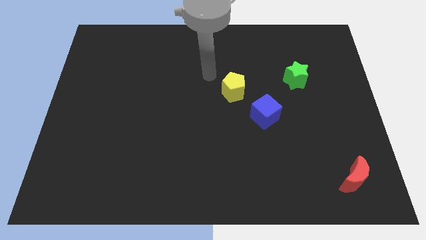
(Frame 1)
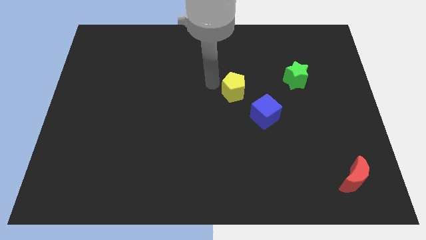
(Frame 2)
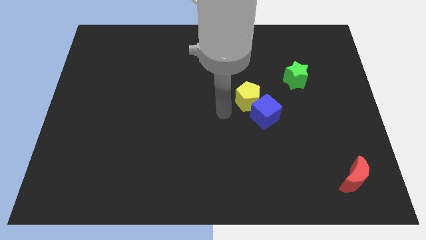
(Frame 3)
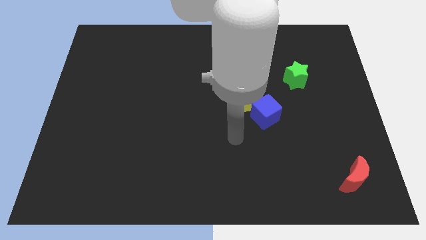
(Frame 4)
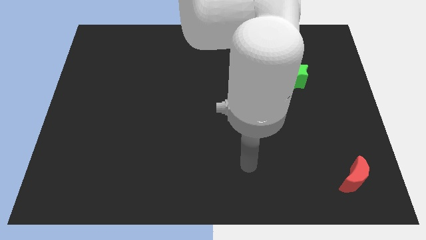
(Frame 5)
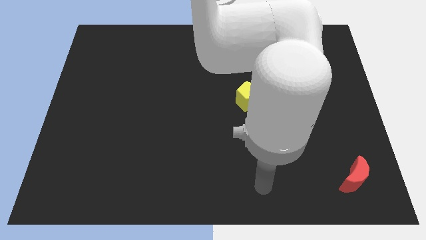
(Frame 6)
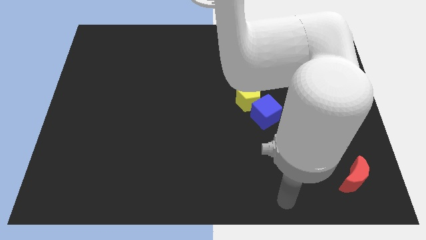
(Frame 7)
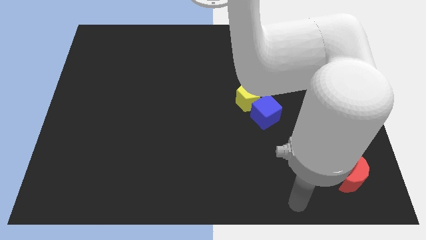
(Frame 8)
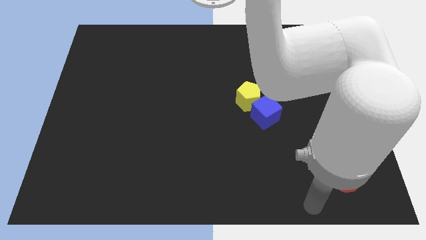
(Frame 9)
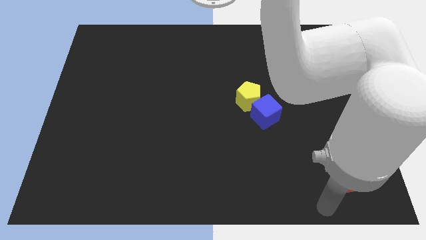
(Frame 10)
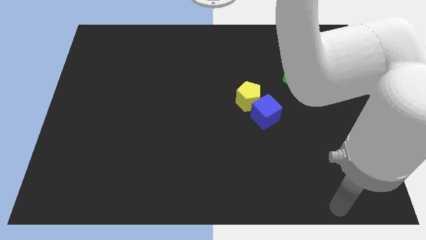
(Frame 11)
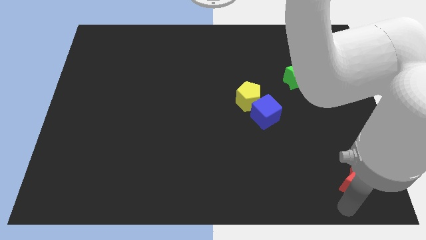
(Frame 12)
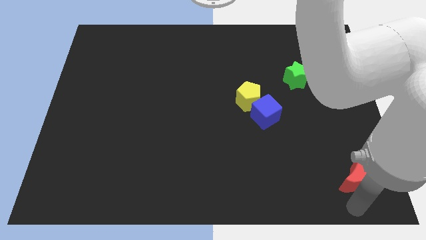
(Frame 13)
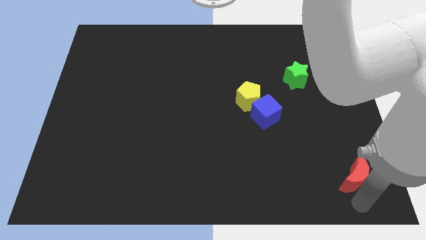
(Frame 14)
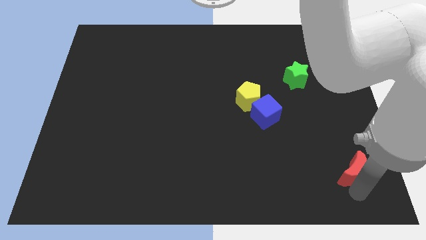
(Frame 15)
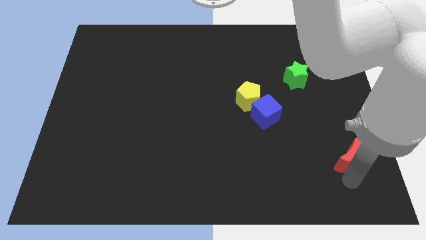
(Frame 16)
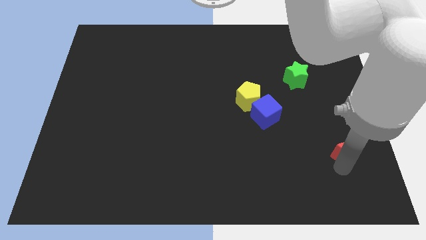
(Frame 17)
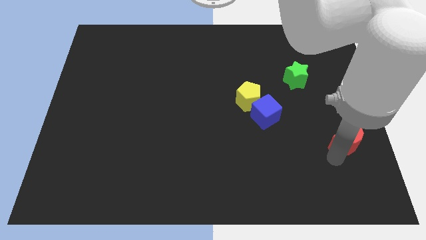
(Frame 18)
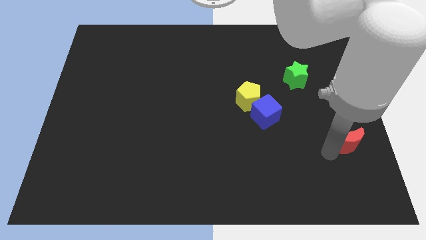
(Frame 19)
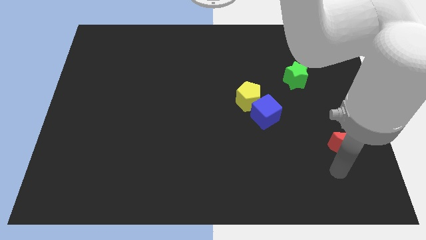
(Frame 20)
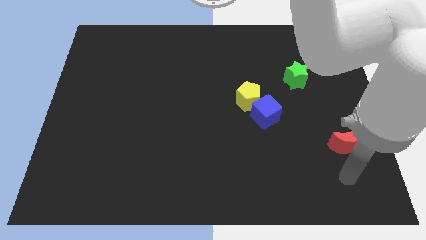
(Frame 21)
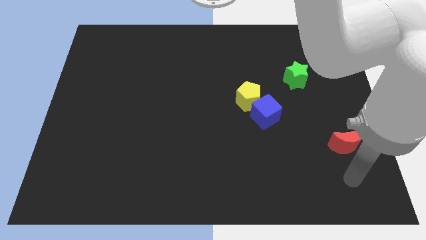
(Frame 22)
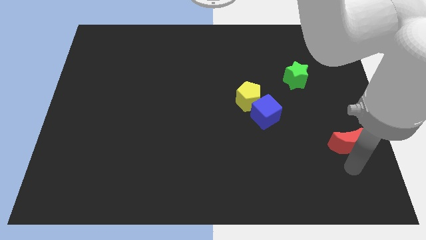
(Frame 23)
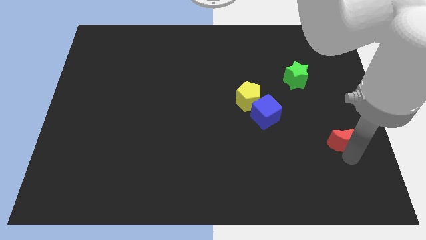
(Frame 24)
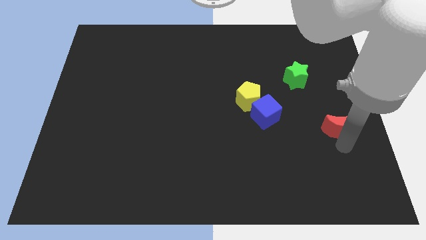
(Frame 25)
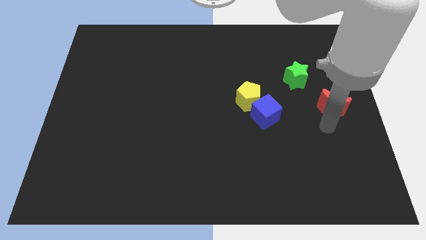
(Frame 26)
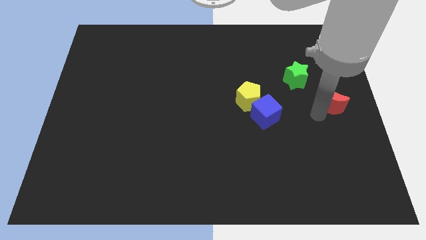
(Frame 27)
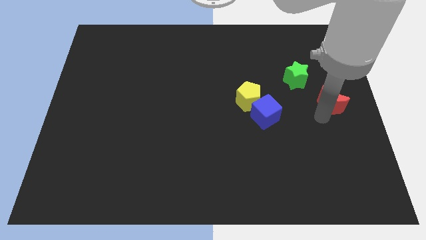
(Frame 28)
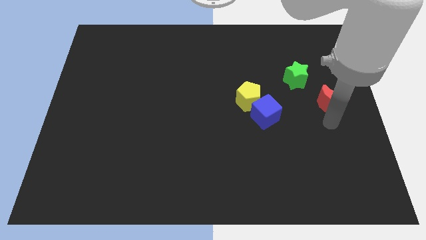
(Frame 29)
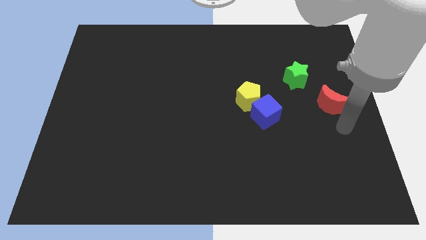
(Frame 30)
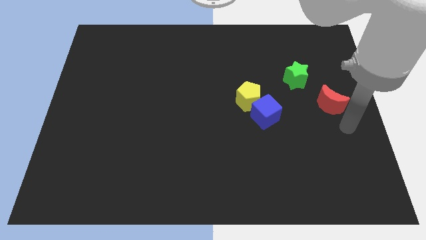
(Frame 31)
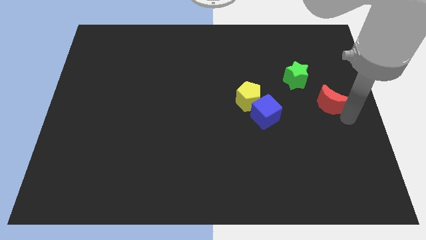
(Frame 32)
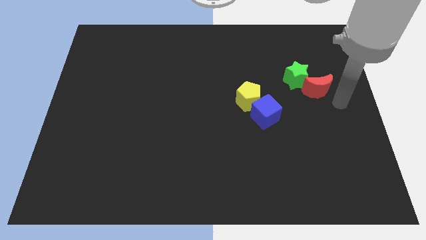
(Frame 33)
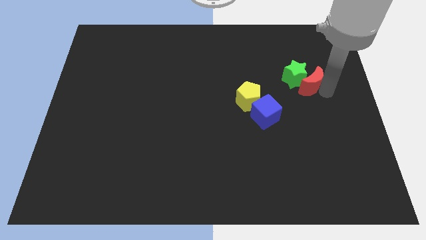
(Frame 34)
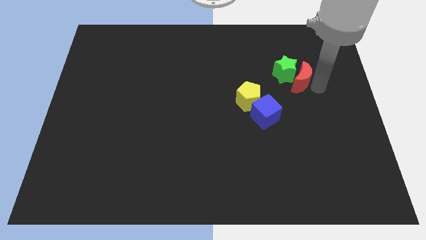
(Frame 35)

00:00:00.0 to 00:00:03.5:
slide the red moon next to the green star

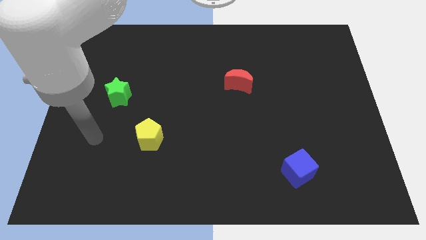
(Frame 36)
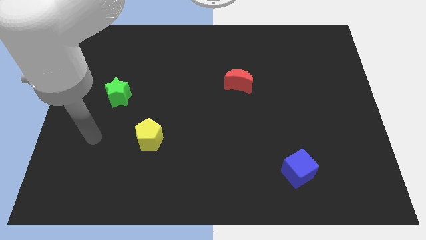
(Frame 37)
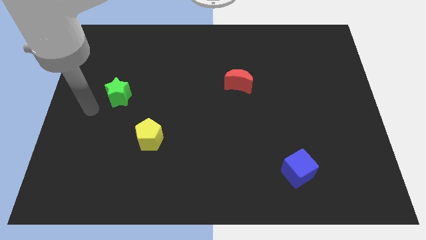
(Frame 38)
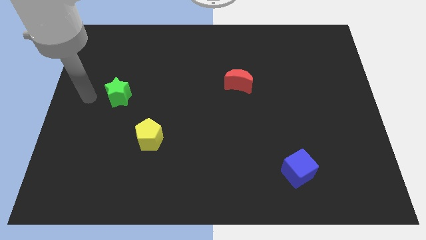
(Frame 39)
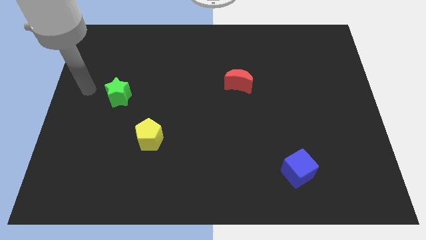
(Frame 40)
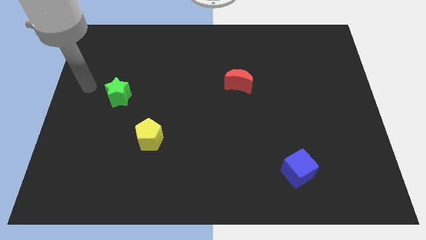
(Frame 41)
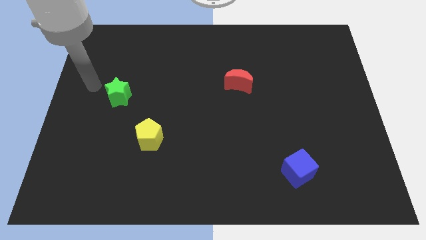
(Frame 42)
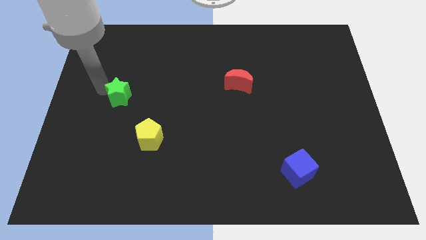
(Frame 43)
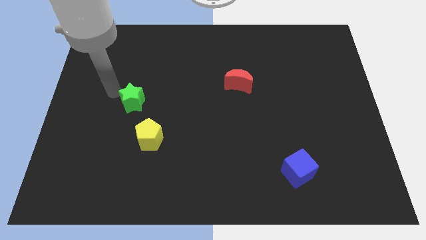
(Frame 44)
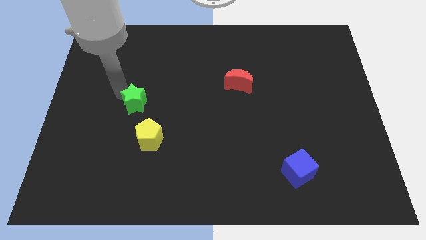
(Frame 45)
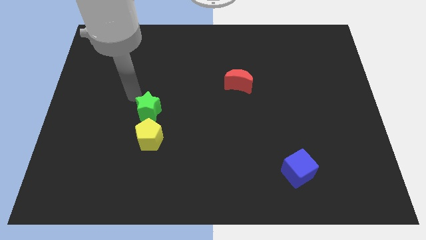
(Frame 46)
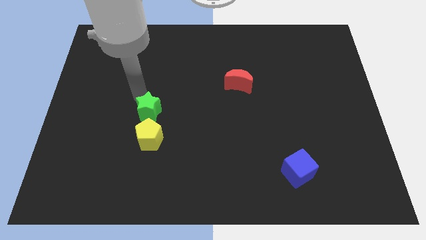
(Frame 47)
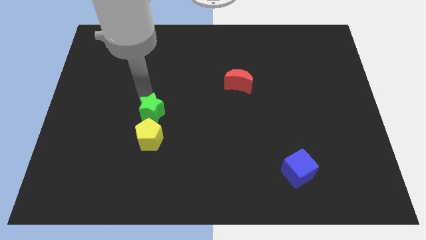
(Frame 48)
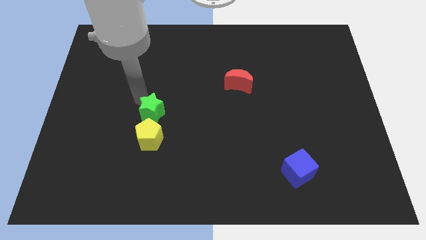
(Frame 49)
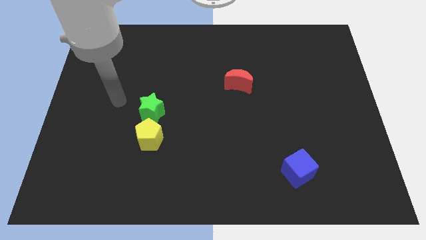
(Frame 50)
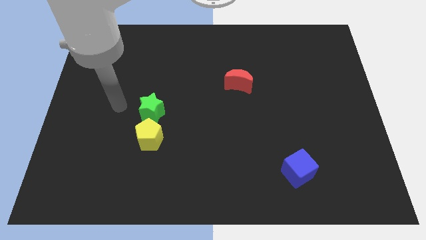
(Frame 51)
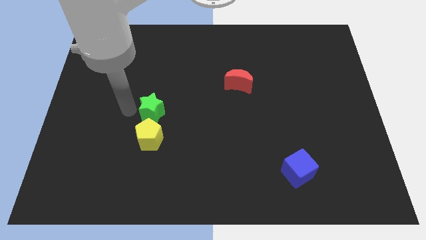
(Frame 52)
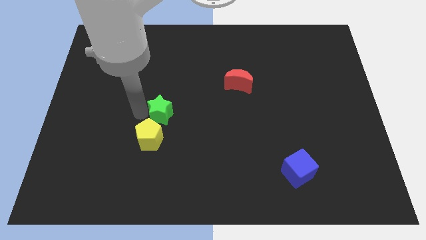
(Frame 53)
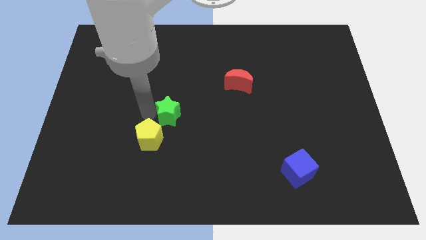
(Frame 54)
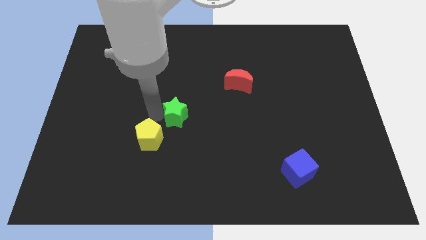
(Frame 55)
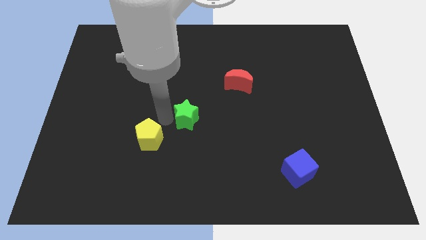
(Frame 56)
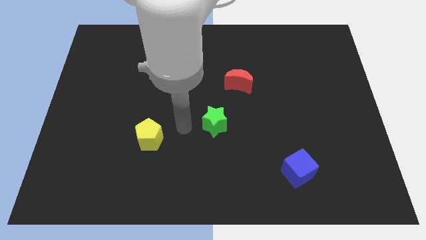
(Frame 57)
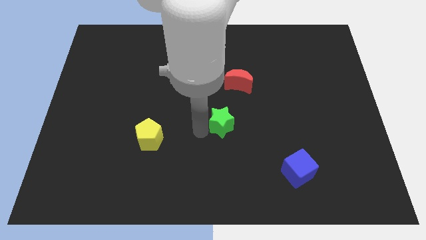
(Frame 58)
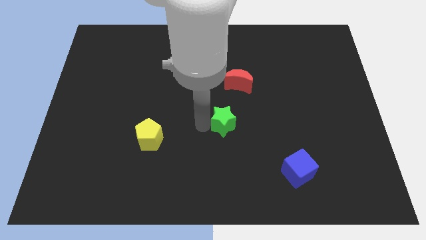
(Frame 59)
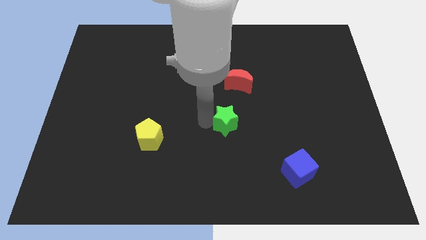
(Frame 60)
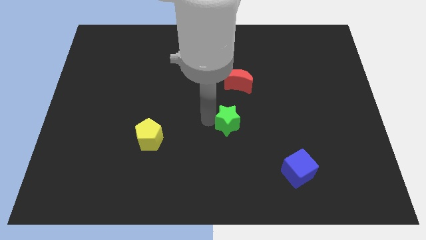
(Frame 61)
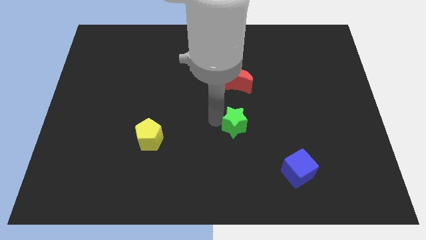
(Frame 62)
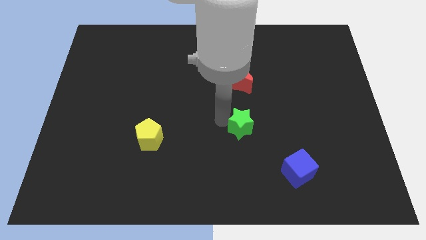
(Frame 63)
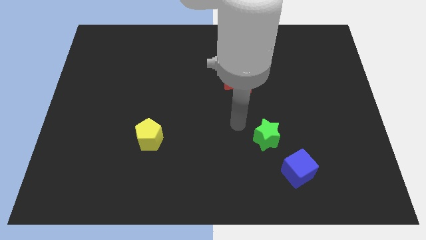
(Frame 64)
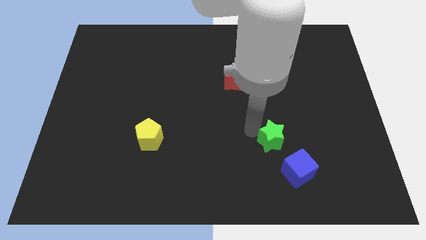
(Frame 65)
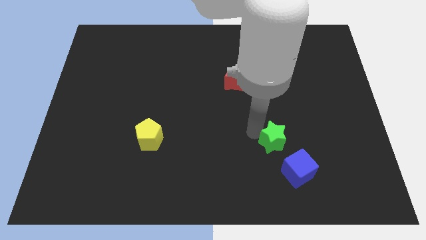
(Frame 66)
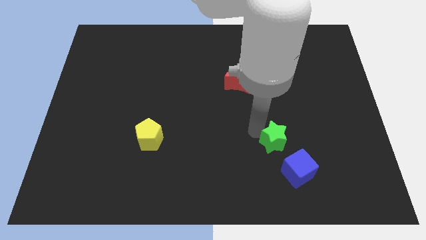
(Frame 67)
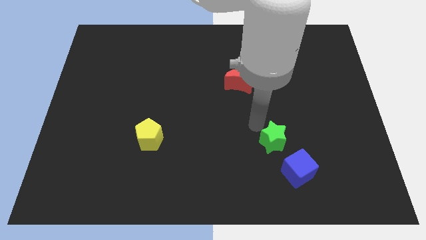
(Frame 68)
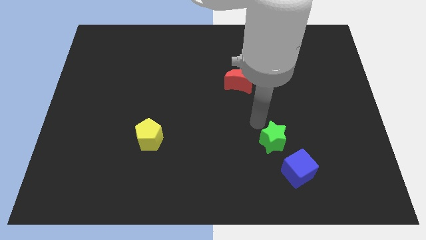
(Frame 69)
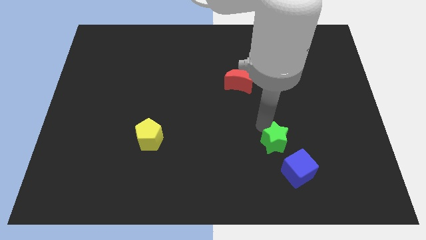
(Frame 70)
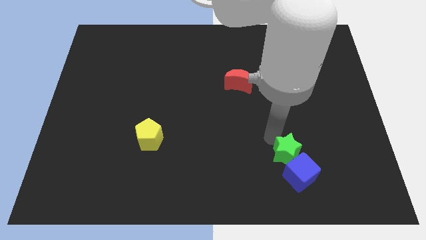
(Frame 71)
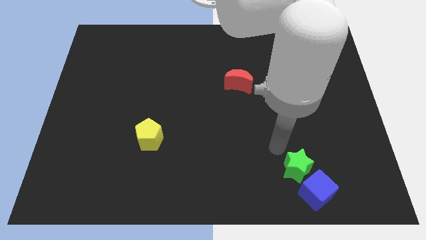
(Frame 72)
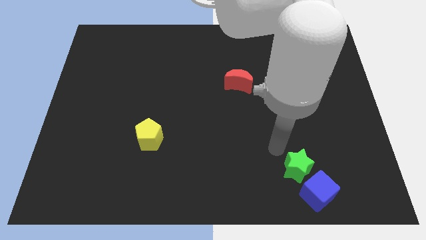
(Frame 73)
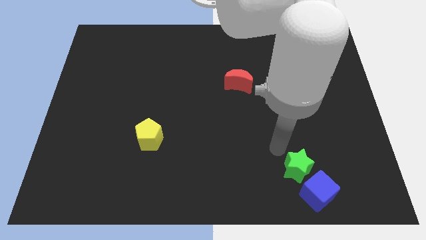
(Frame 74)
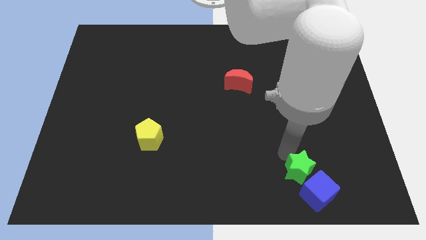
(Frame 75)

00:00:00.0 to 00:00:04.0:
put the star towards the blue block

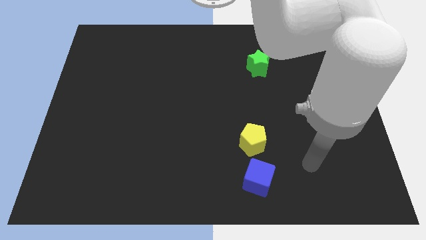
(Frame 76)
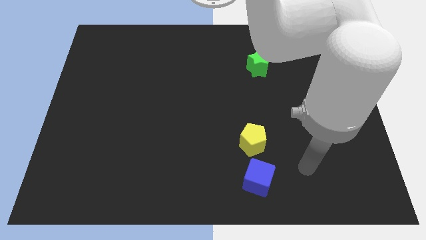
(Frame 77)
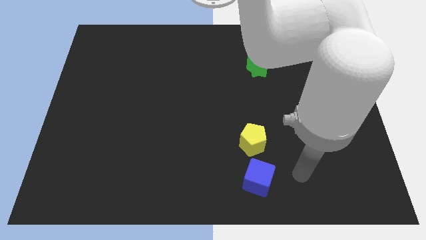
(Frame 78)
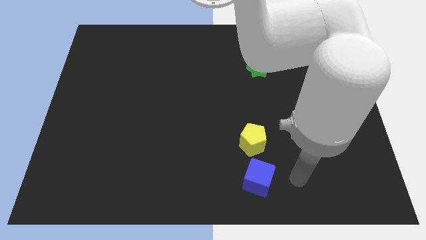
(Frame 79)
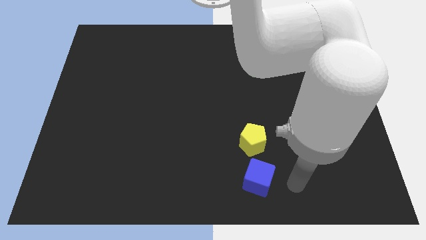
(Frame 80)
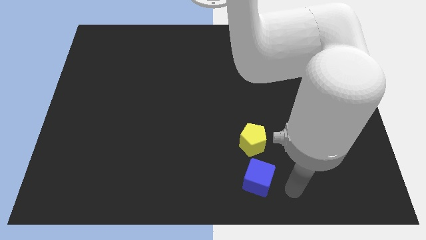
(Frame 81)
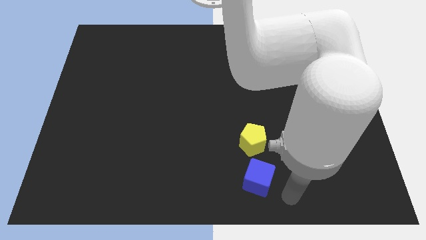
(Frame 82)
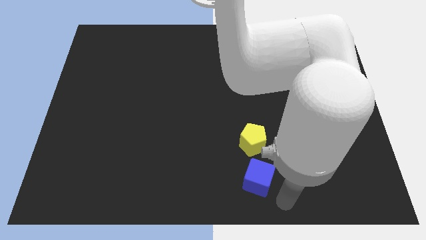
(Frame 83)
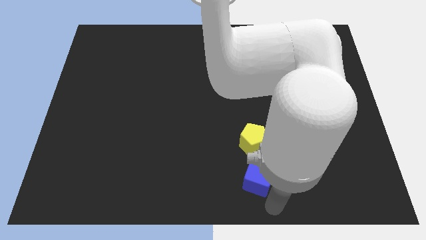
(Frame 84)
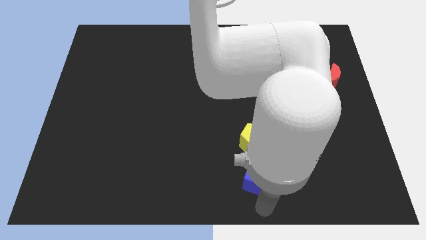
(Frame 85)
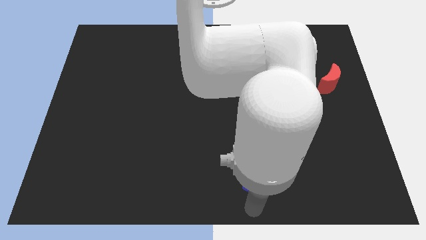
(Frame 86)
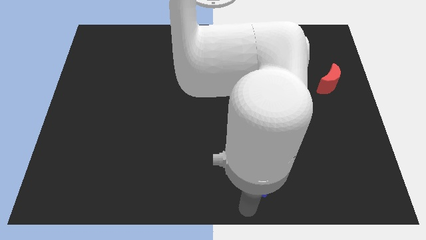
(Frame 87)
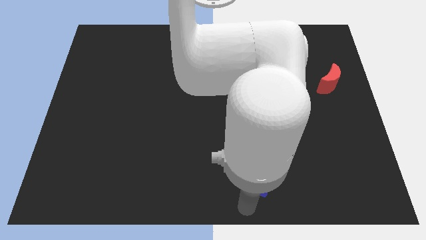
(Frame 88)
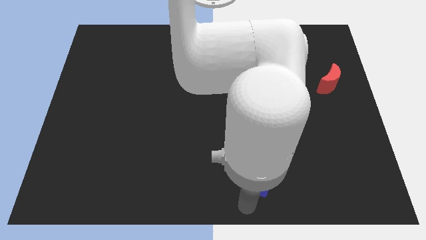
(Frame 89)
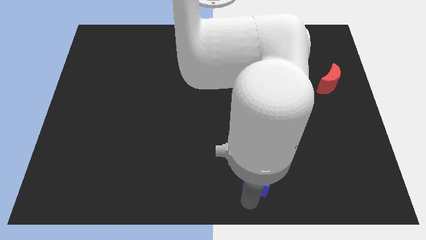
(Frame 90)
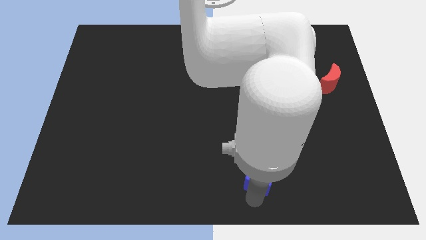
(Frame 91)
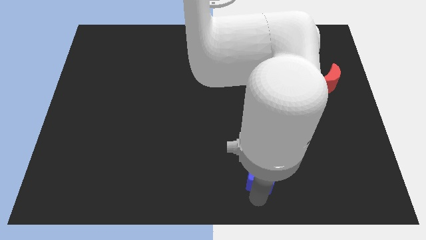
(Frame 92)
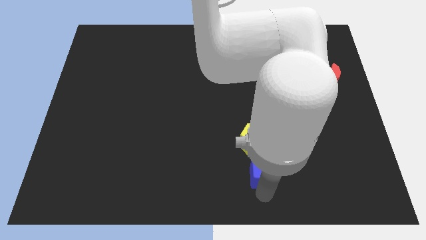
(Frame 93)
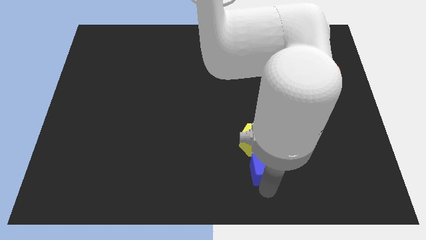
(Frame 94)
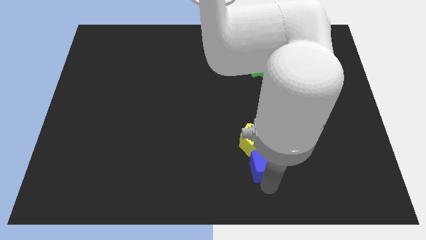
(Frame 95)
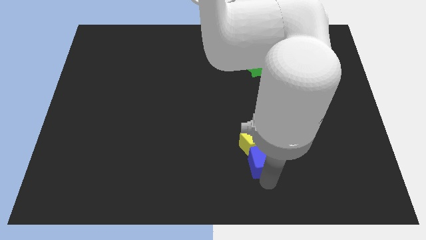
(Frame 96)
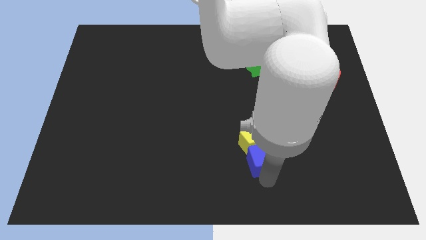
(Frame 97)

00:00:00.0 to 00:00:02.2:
push the cube close to the yellow pentagon
